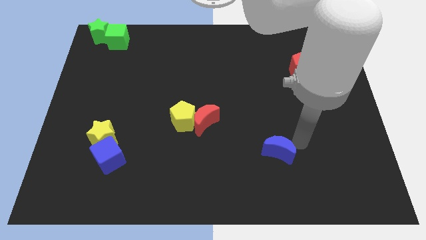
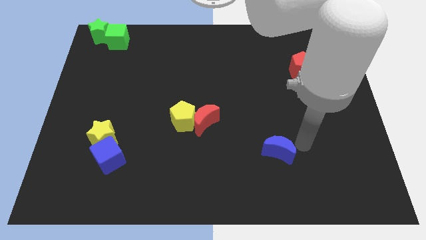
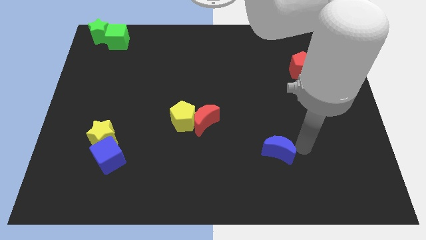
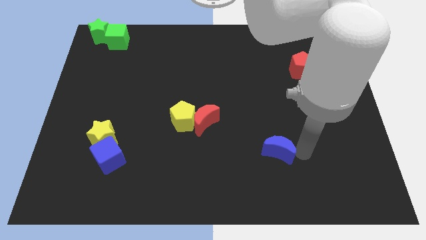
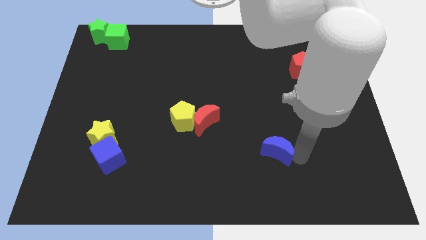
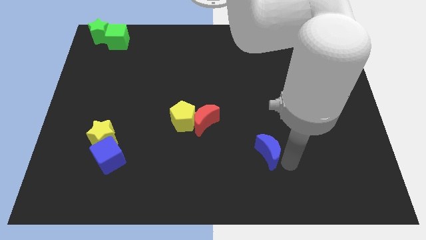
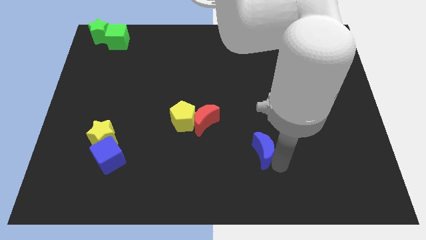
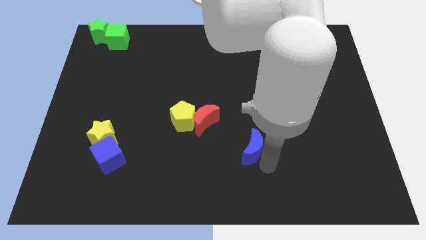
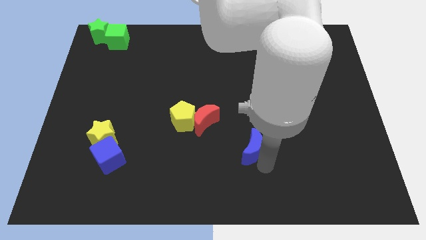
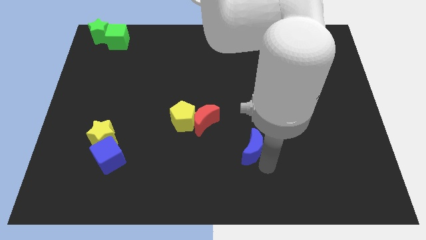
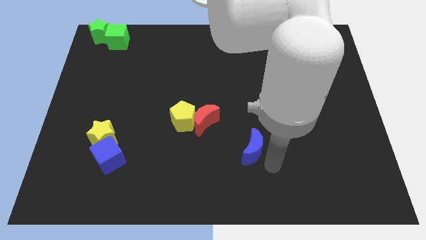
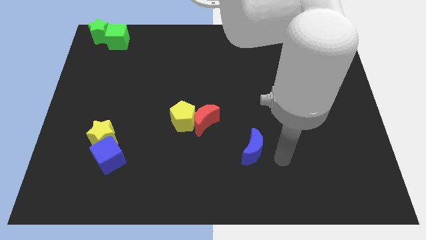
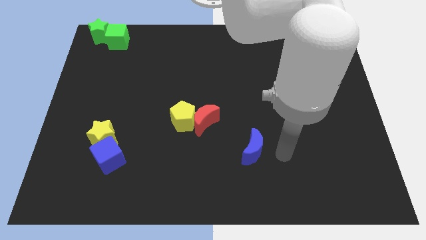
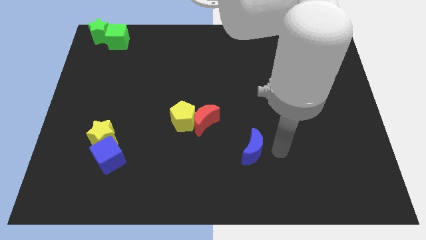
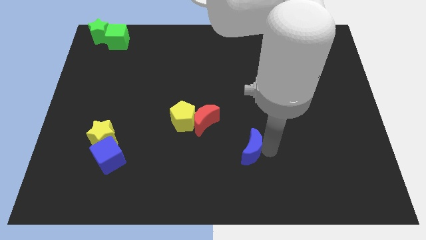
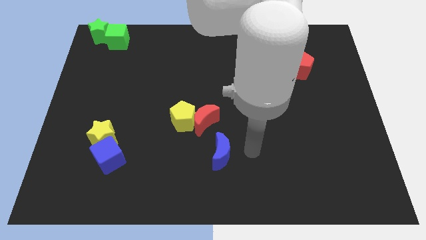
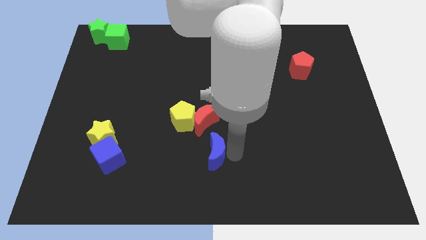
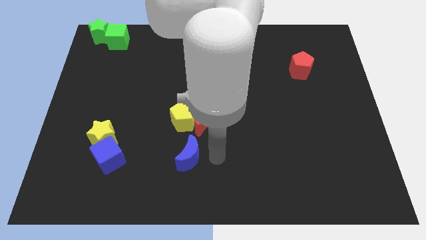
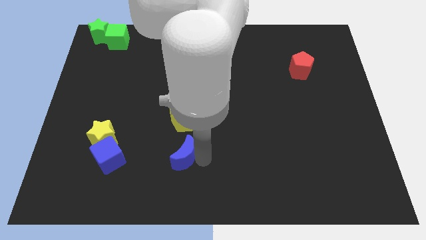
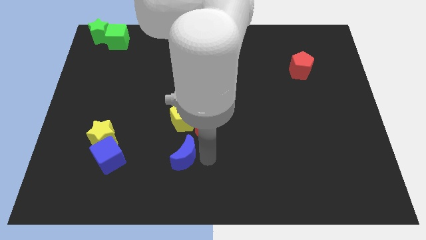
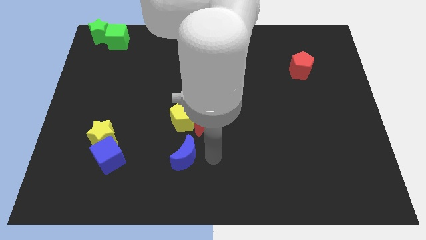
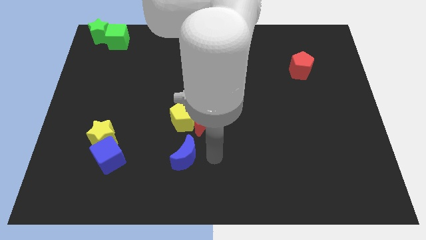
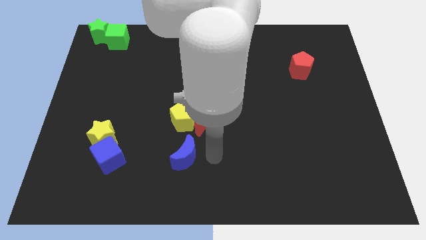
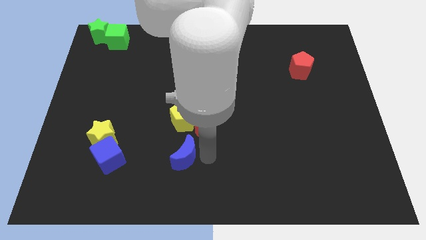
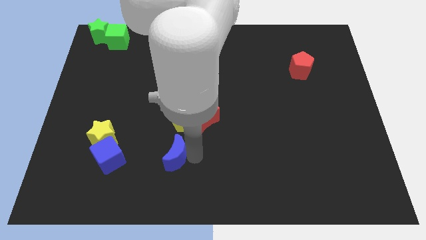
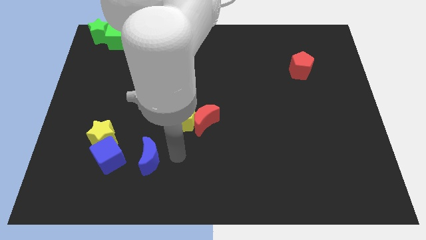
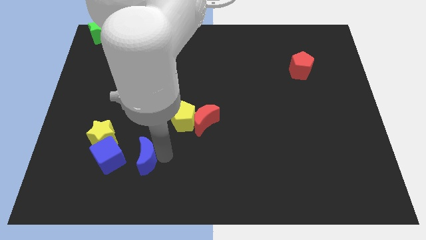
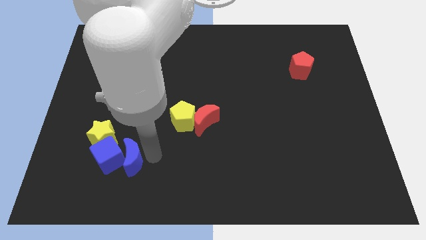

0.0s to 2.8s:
push the blue crescent to the right of the blue cube

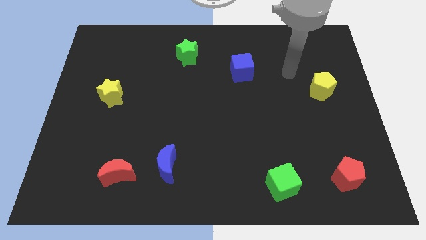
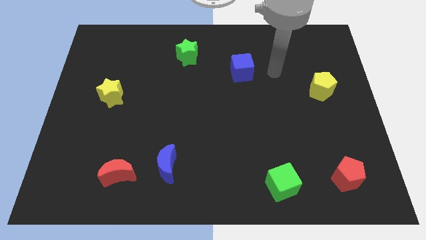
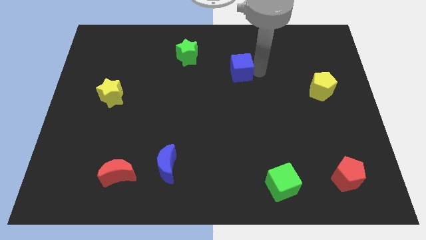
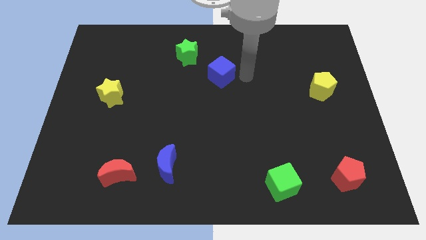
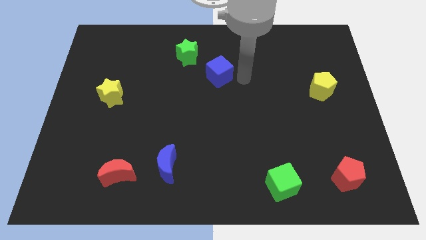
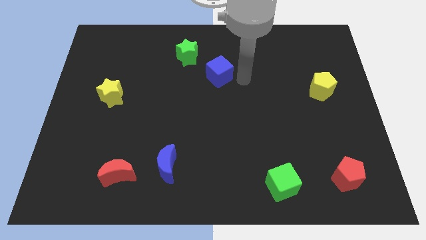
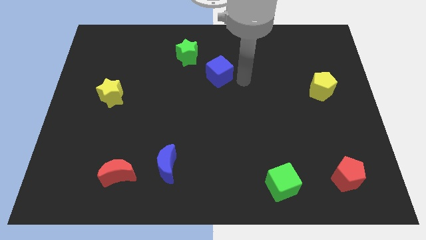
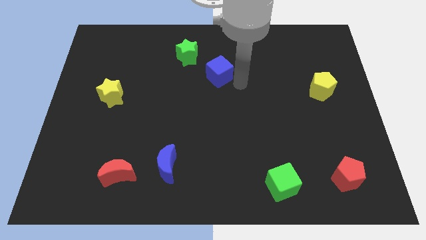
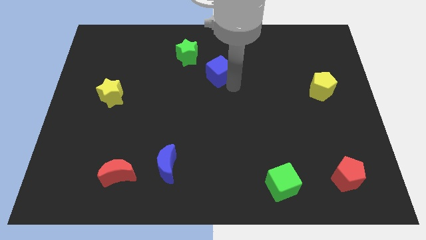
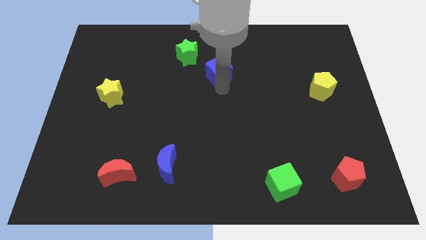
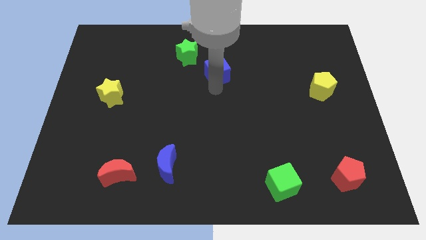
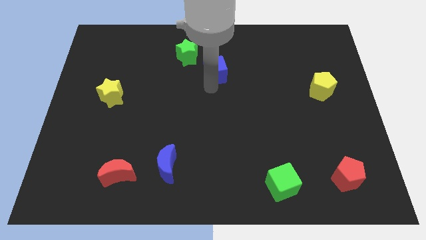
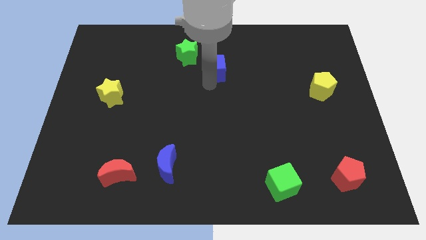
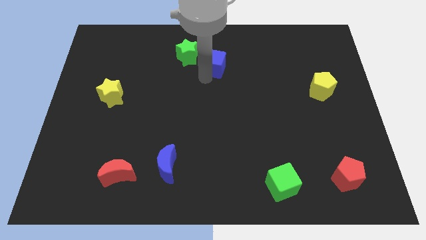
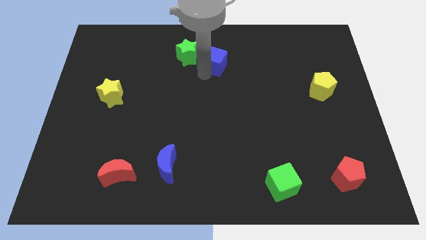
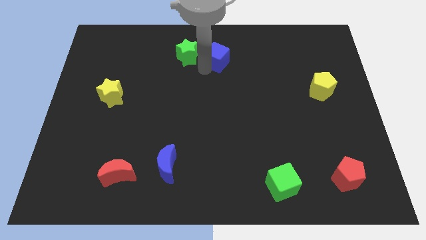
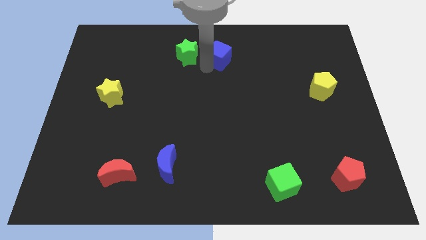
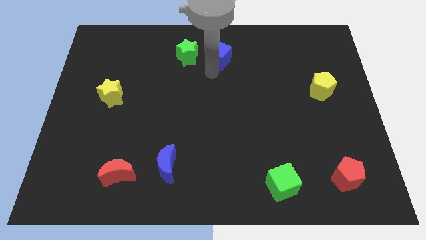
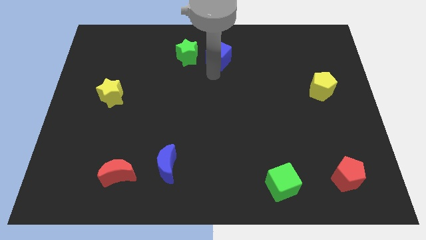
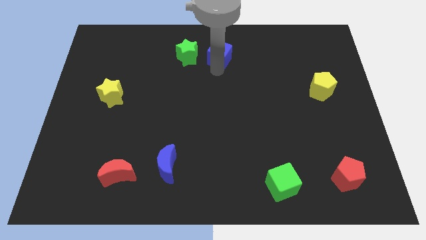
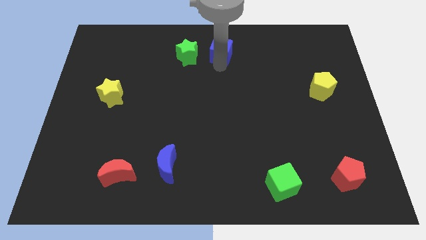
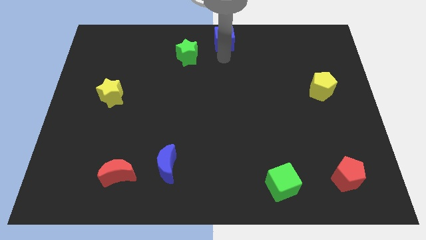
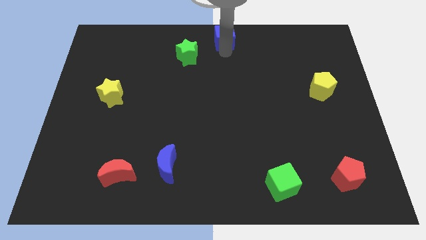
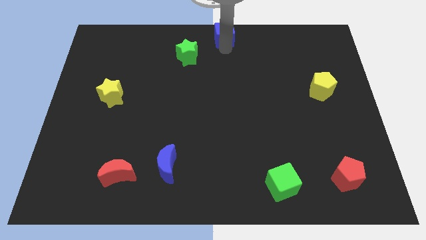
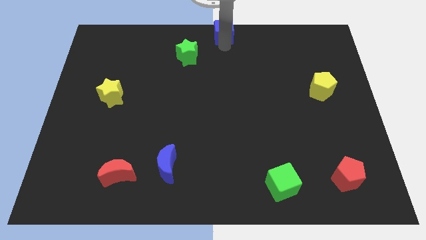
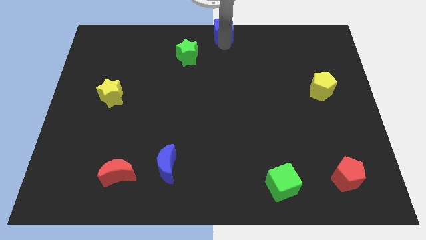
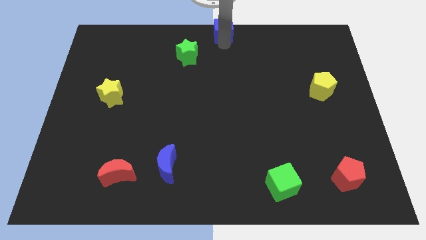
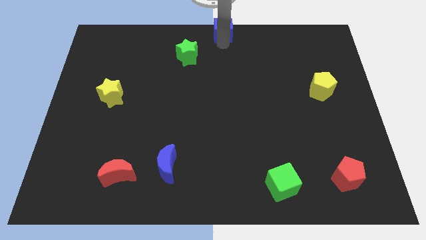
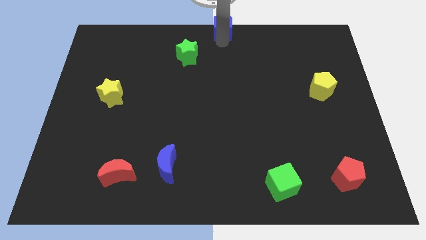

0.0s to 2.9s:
push the blue cube to the top center

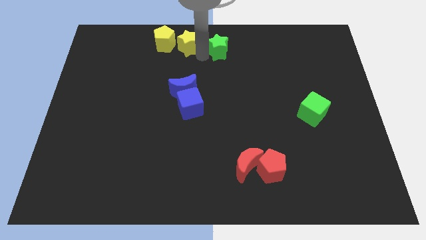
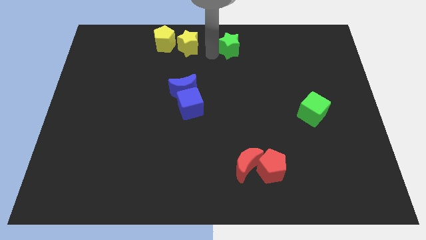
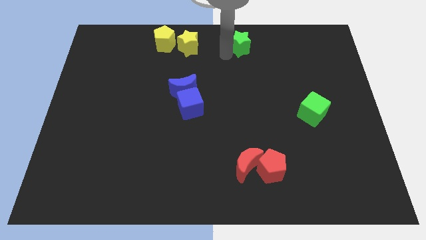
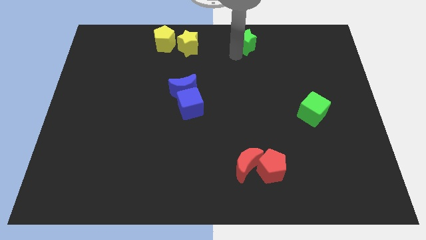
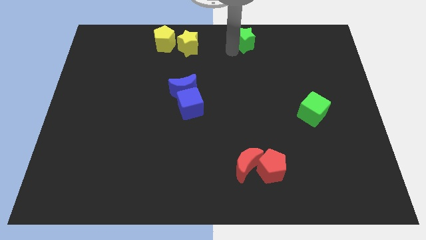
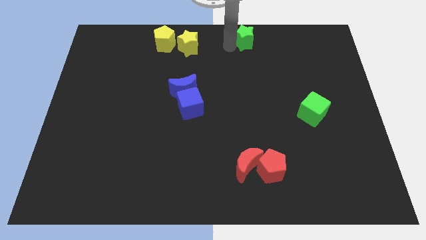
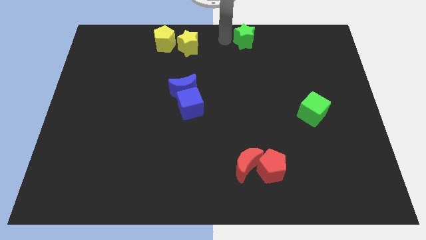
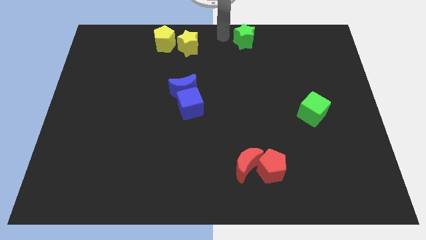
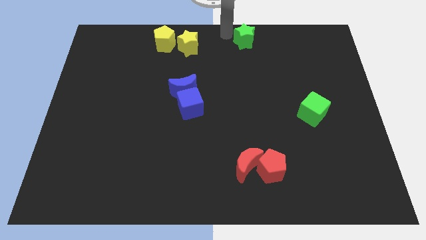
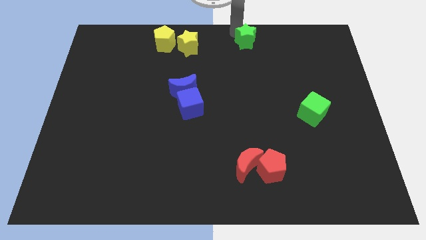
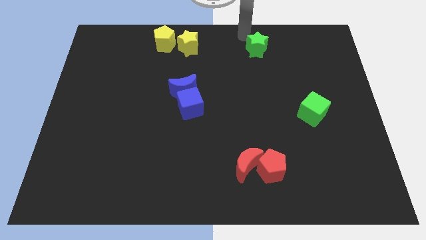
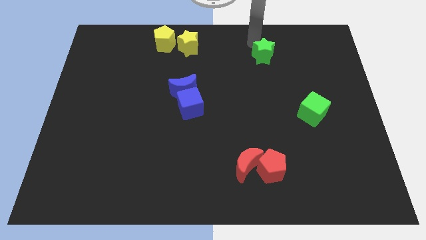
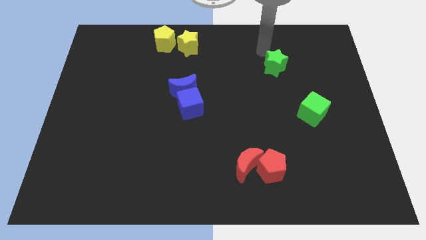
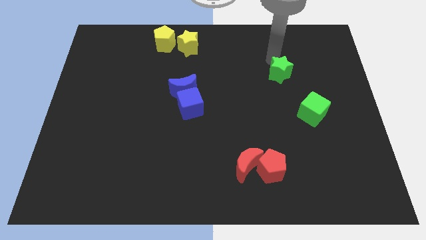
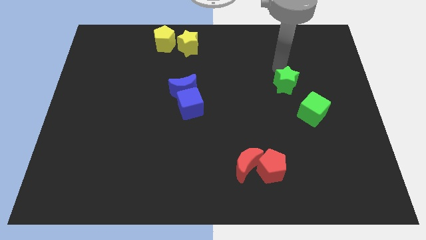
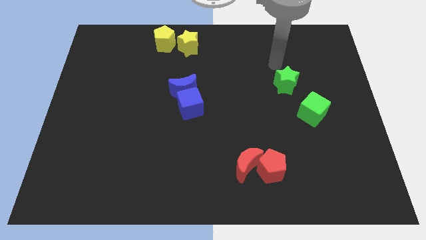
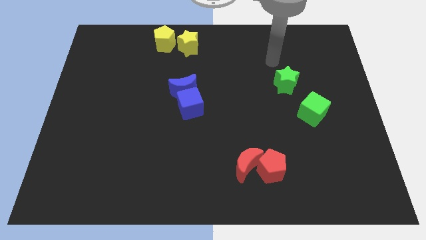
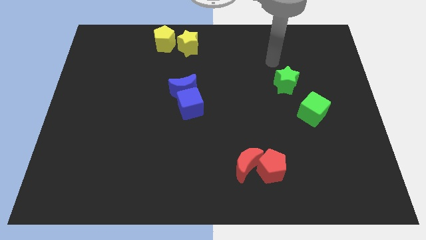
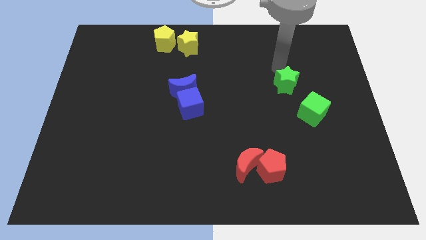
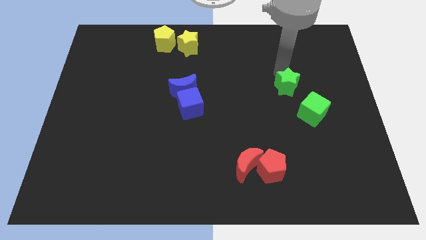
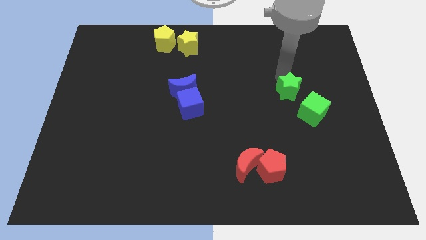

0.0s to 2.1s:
move green star diagonally above green cube

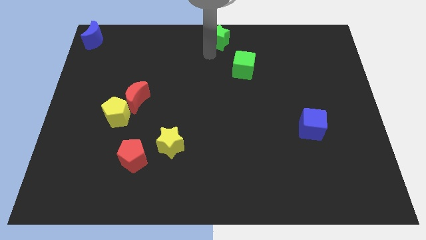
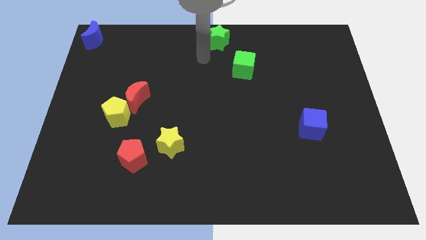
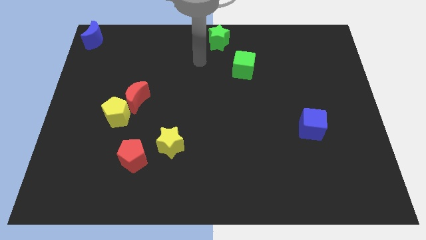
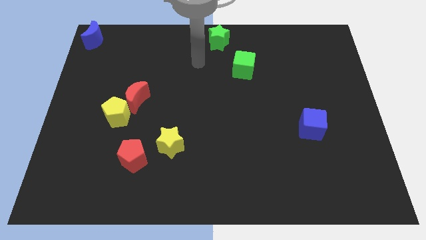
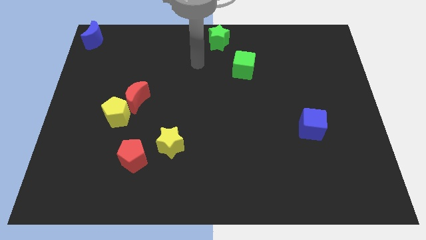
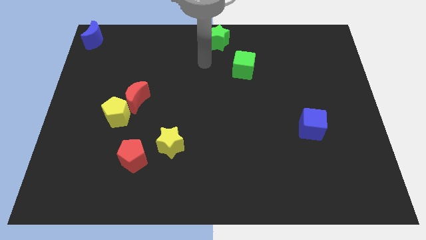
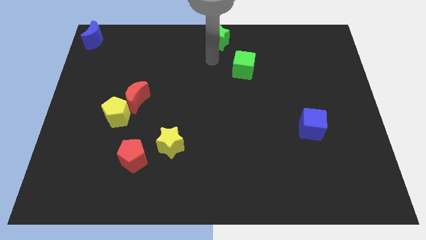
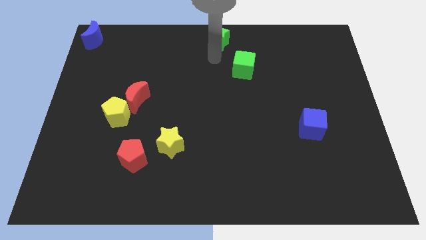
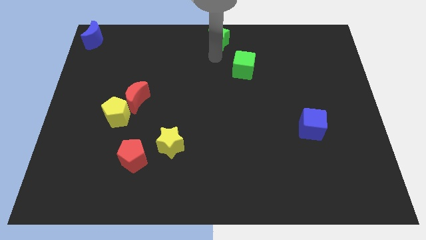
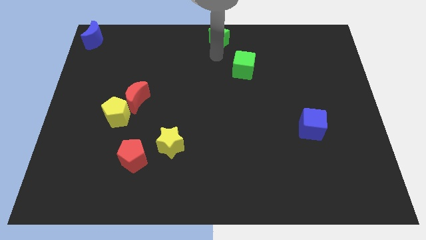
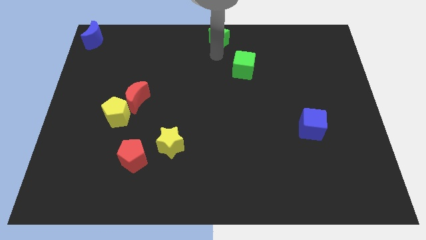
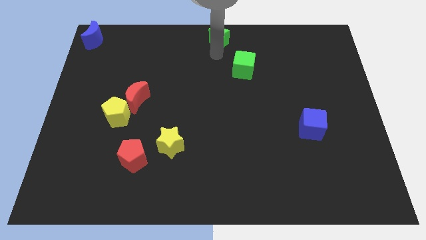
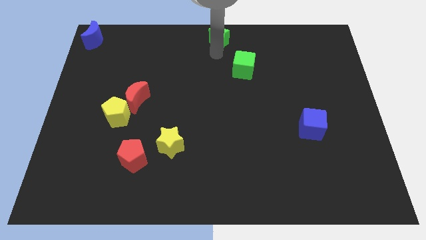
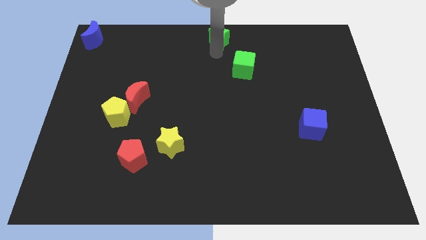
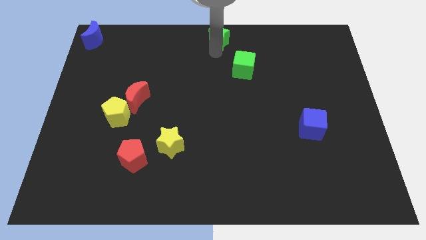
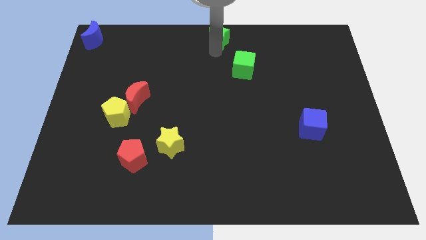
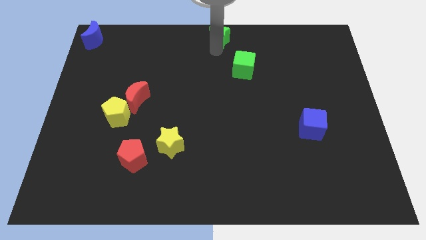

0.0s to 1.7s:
push the green star slightly up
